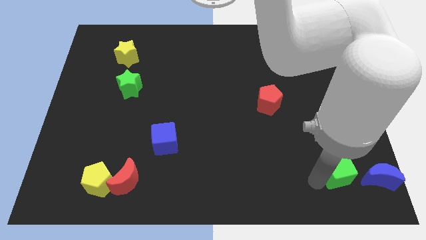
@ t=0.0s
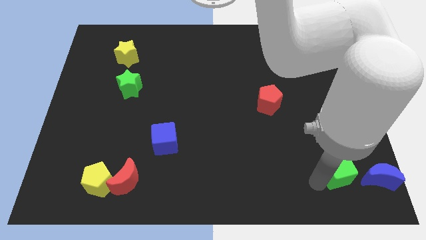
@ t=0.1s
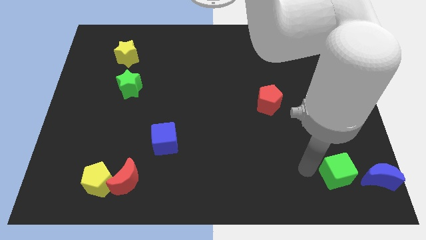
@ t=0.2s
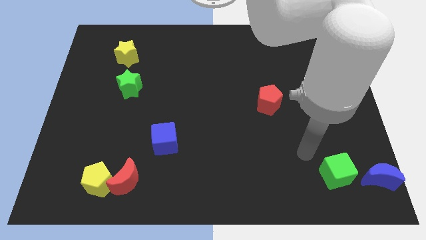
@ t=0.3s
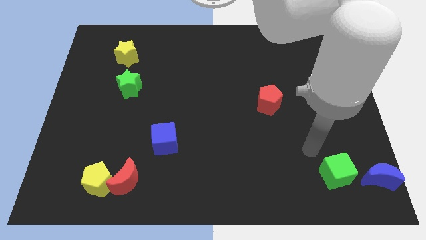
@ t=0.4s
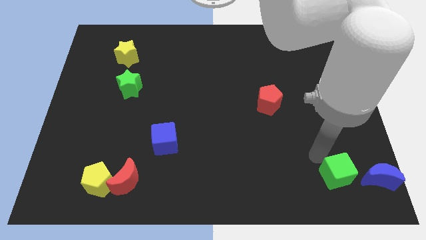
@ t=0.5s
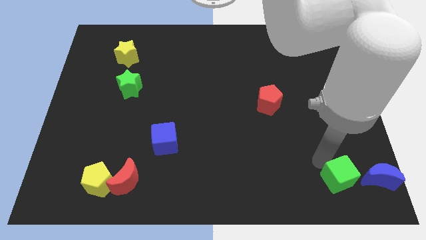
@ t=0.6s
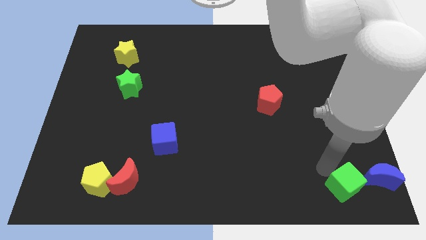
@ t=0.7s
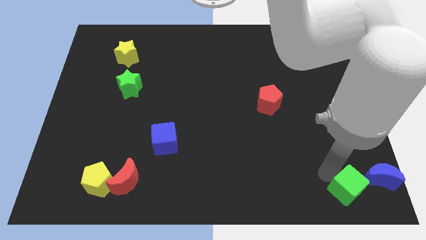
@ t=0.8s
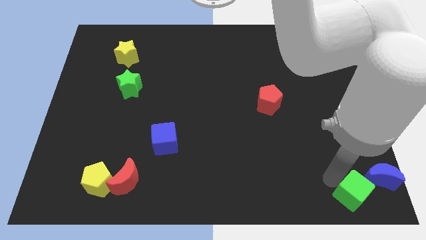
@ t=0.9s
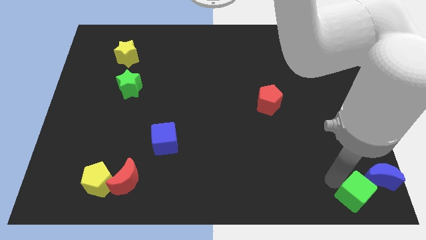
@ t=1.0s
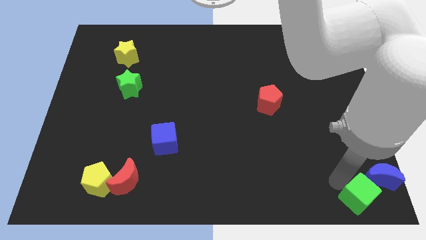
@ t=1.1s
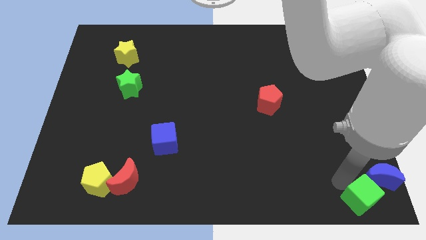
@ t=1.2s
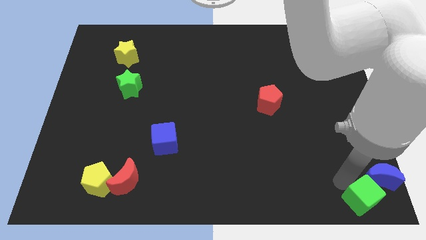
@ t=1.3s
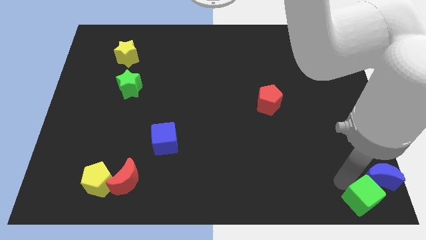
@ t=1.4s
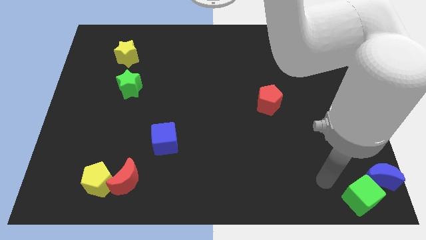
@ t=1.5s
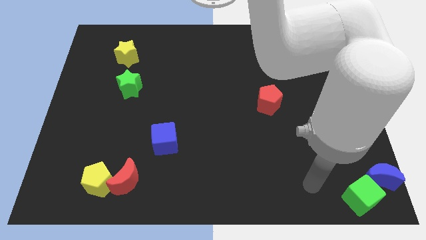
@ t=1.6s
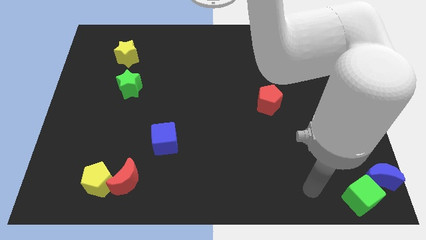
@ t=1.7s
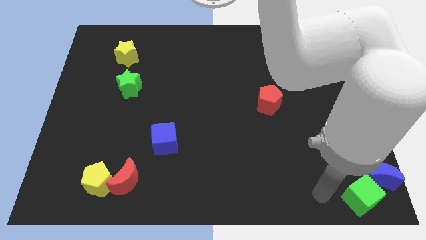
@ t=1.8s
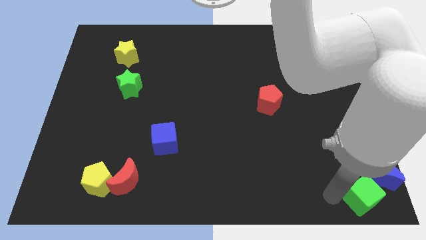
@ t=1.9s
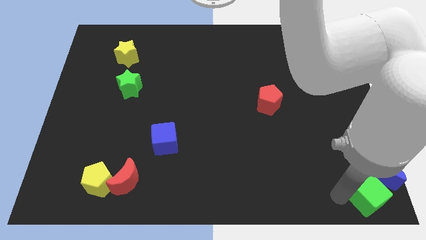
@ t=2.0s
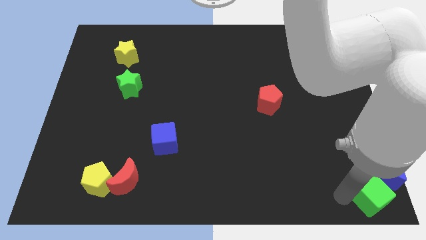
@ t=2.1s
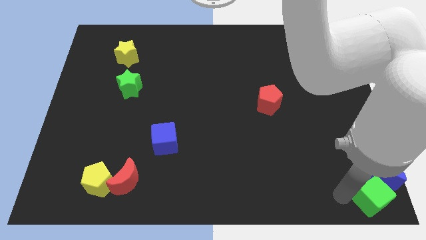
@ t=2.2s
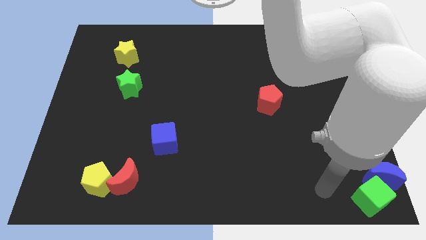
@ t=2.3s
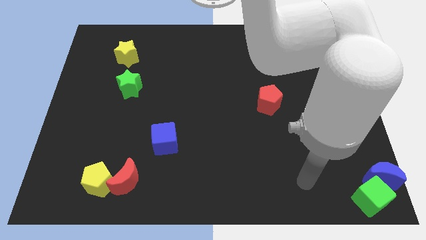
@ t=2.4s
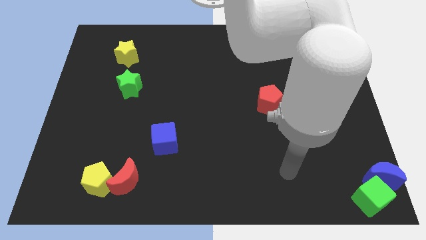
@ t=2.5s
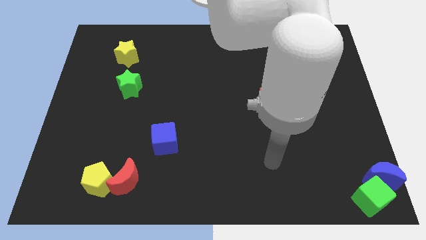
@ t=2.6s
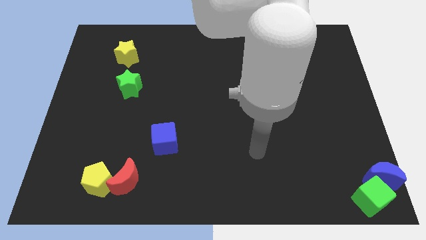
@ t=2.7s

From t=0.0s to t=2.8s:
put the green cube at the bottom of the blue moon

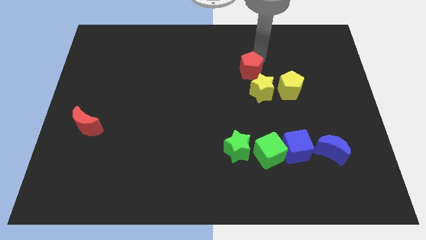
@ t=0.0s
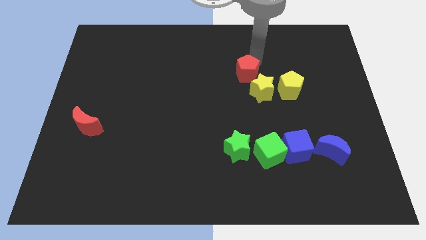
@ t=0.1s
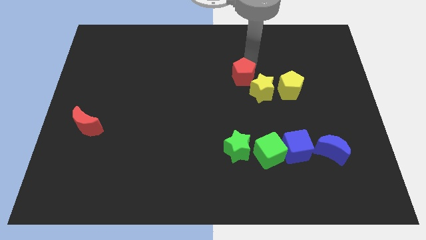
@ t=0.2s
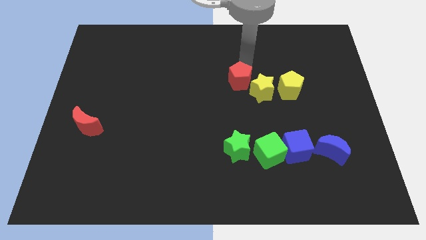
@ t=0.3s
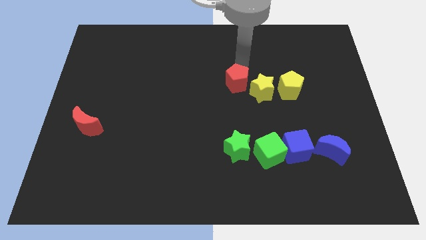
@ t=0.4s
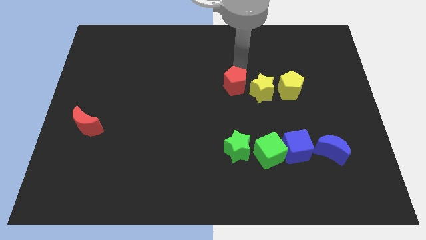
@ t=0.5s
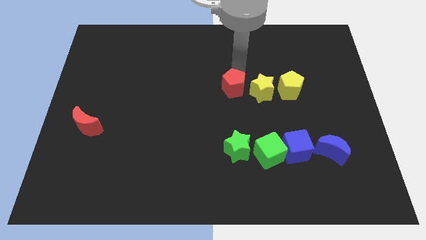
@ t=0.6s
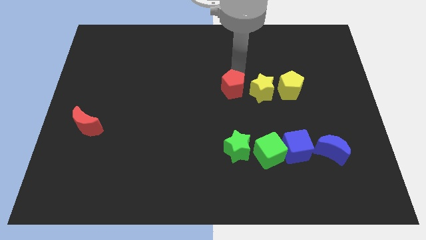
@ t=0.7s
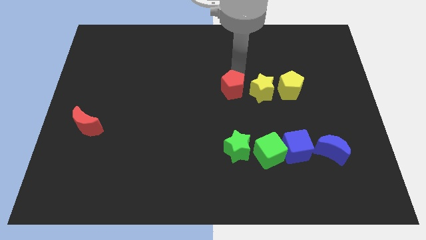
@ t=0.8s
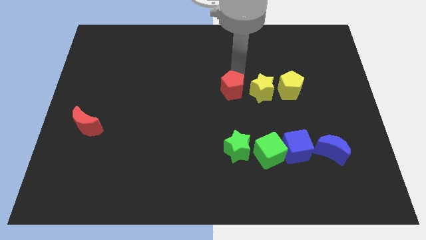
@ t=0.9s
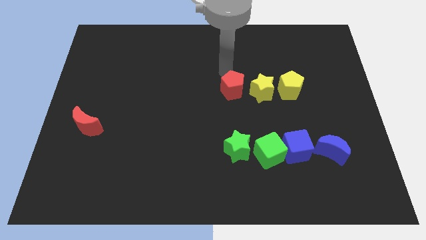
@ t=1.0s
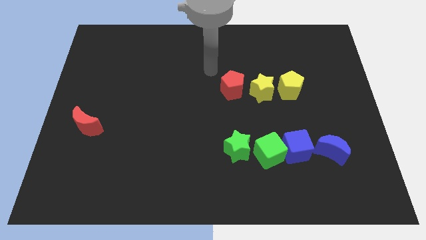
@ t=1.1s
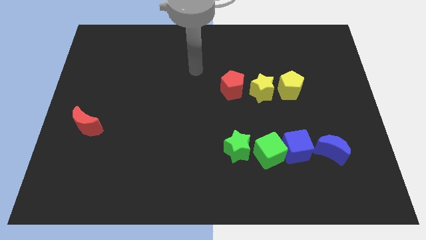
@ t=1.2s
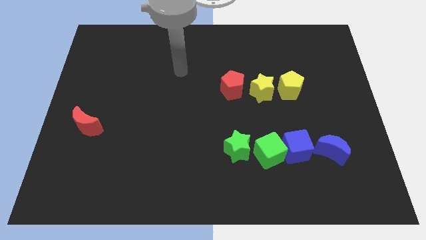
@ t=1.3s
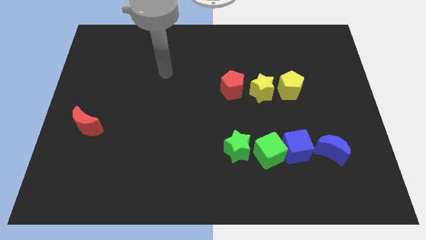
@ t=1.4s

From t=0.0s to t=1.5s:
push the red pentagon to the left side of the yellow star

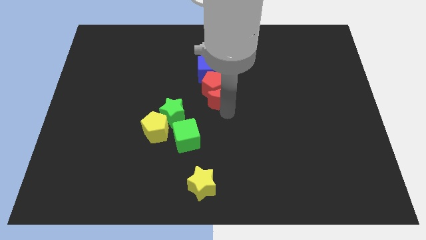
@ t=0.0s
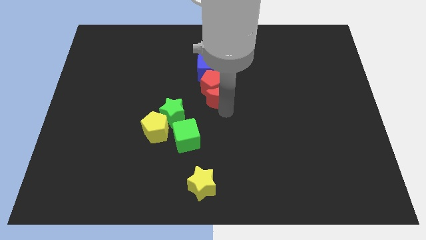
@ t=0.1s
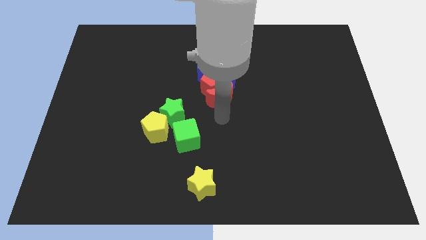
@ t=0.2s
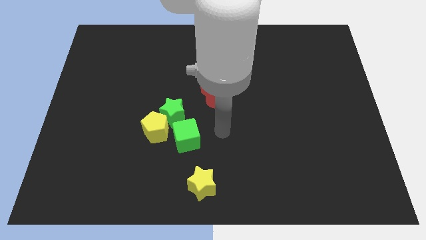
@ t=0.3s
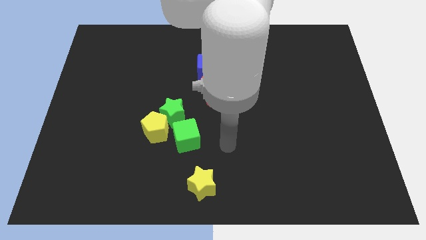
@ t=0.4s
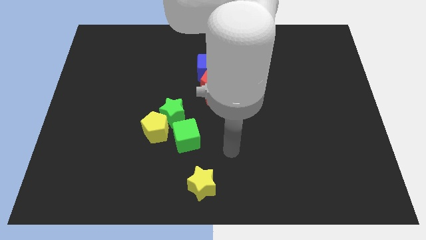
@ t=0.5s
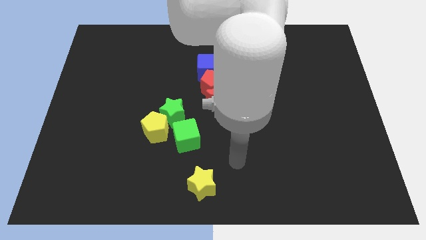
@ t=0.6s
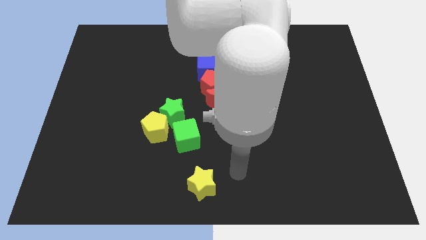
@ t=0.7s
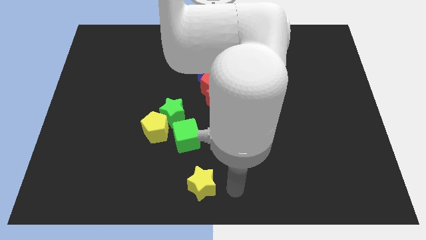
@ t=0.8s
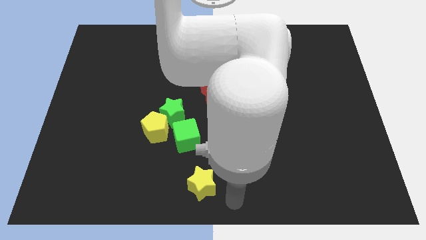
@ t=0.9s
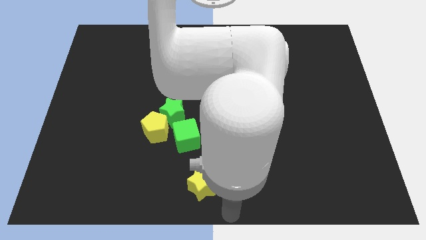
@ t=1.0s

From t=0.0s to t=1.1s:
slide your hand away from red moon

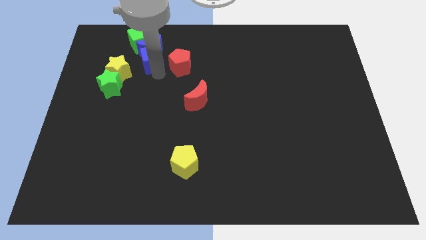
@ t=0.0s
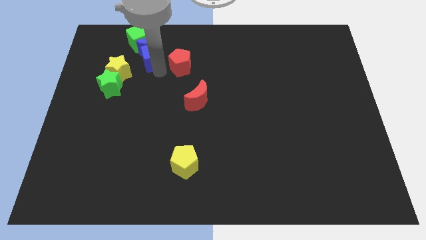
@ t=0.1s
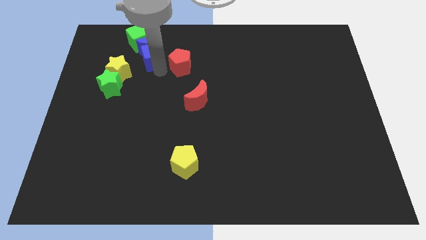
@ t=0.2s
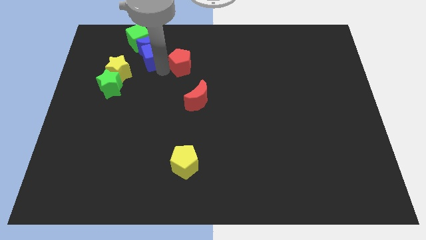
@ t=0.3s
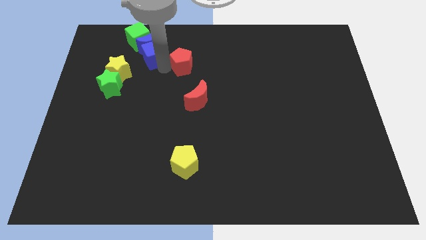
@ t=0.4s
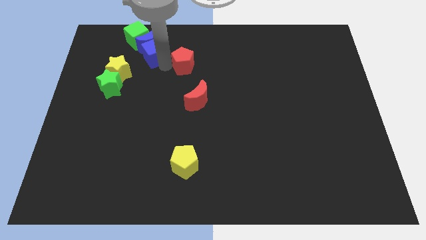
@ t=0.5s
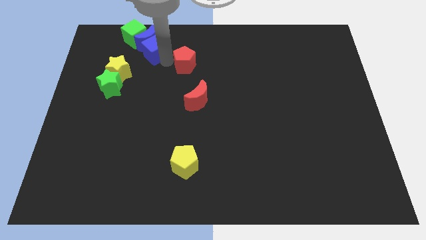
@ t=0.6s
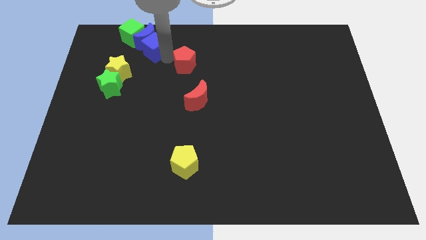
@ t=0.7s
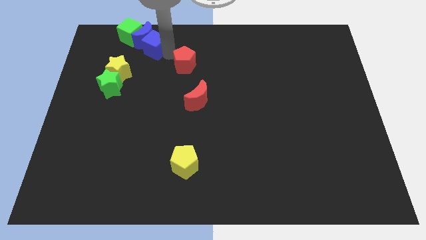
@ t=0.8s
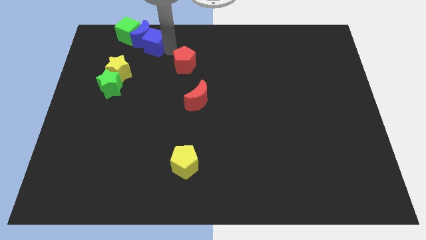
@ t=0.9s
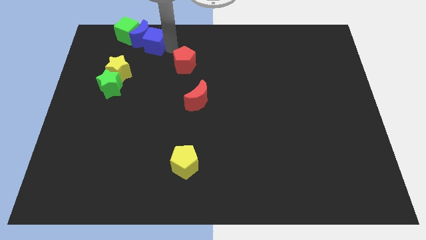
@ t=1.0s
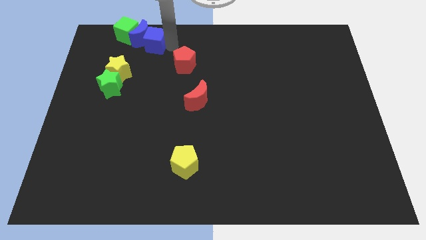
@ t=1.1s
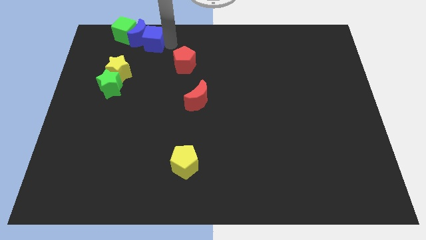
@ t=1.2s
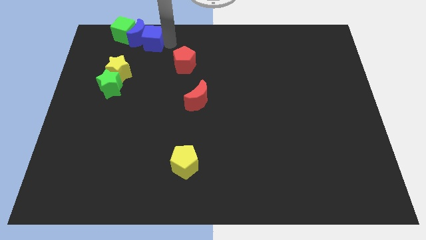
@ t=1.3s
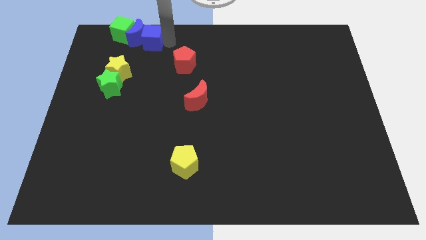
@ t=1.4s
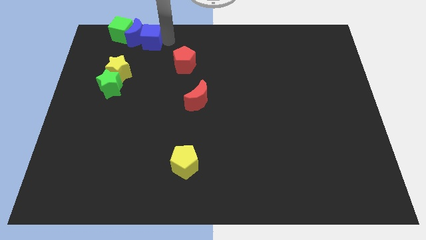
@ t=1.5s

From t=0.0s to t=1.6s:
push blue cube to the right of the blue moon

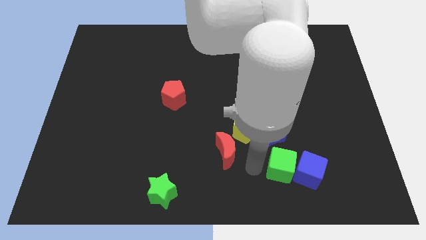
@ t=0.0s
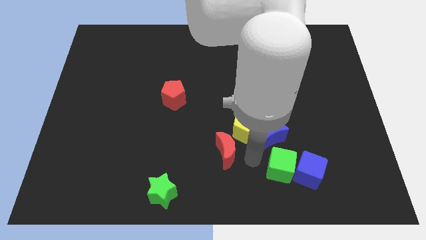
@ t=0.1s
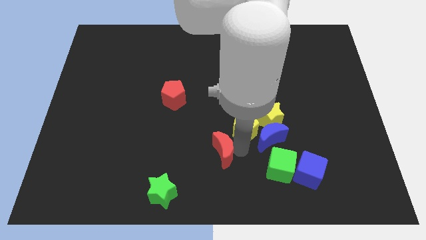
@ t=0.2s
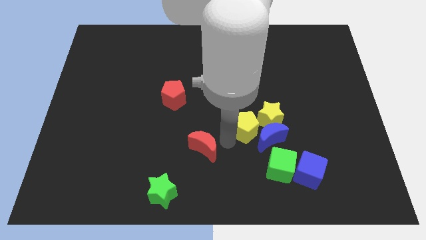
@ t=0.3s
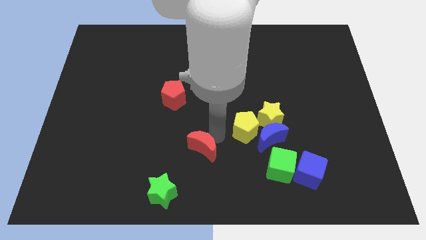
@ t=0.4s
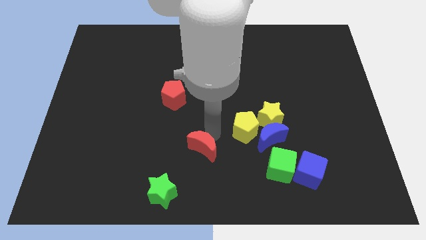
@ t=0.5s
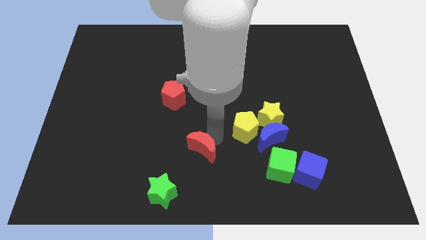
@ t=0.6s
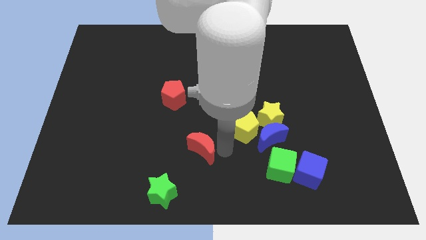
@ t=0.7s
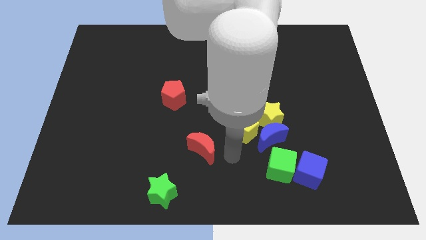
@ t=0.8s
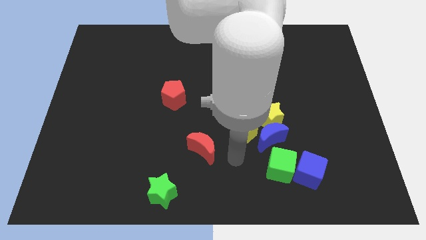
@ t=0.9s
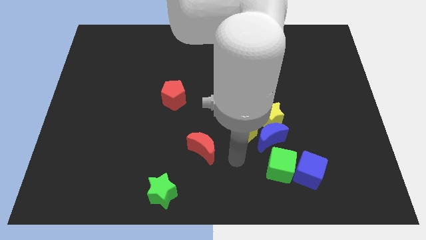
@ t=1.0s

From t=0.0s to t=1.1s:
separate red moon from yellow pentagon

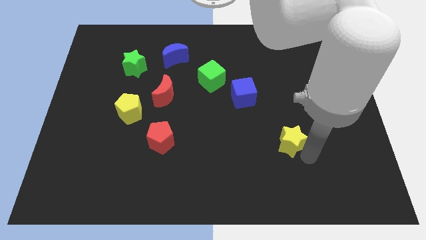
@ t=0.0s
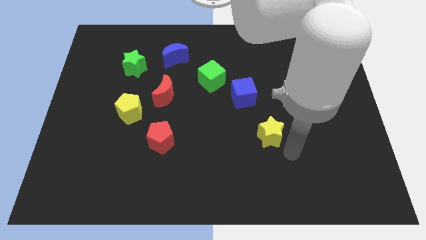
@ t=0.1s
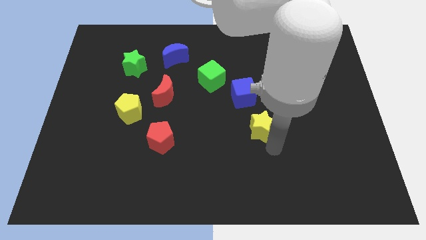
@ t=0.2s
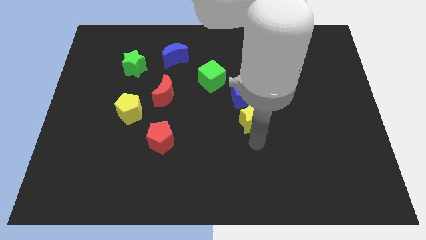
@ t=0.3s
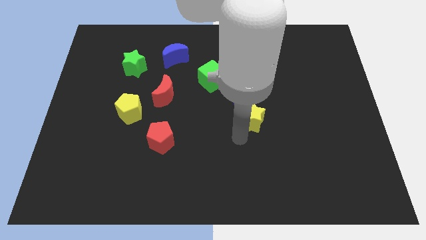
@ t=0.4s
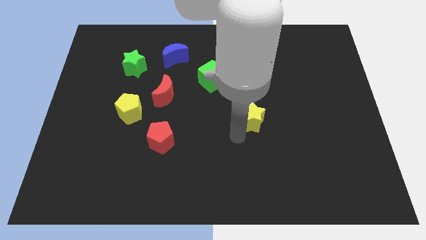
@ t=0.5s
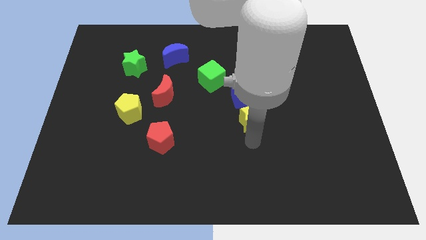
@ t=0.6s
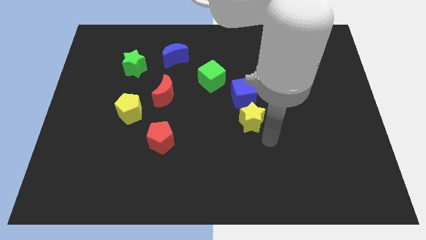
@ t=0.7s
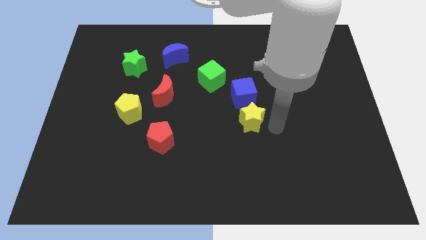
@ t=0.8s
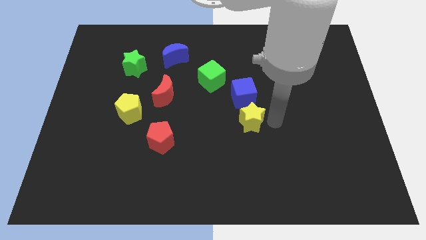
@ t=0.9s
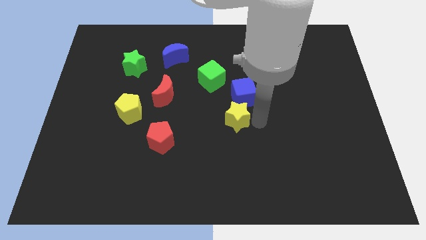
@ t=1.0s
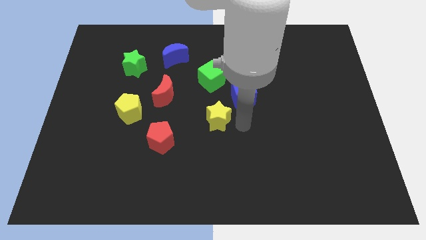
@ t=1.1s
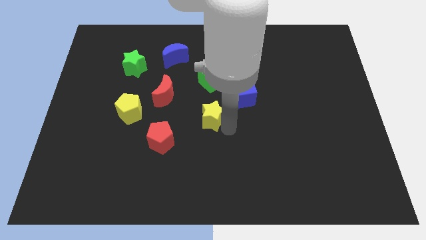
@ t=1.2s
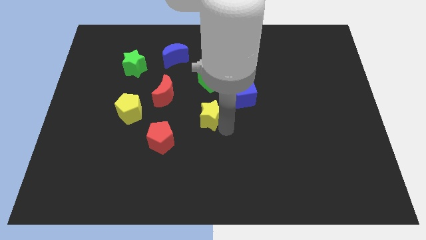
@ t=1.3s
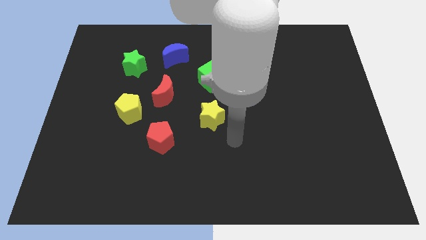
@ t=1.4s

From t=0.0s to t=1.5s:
move the yellow star to the center
